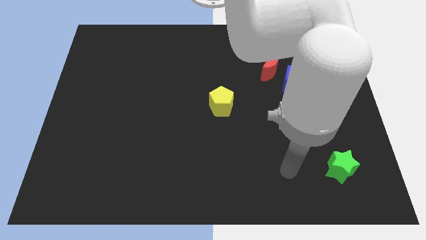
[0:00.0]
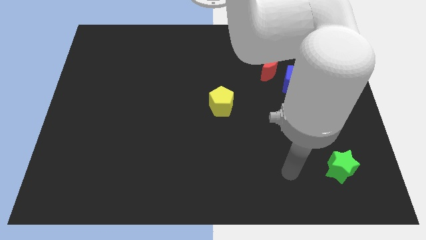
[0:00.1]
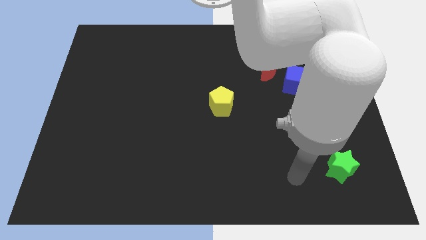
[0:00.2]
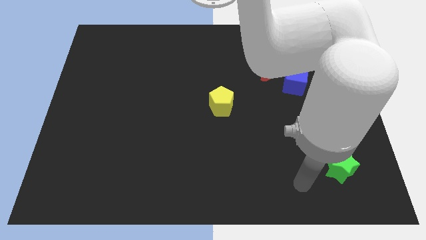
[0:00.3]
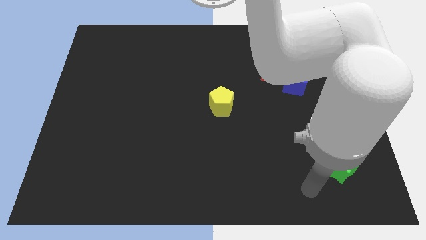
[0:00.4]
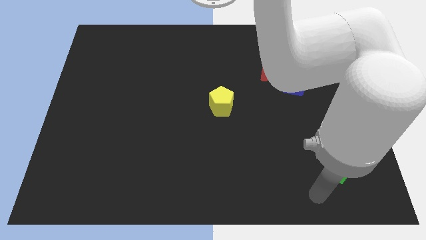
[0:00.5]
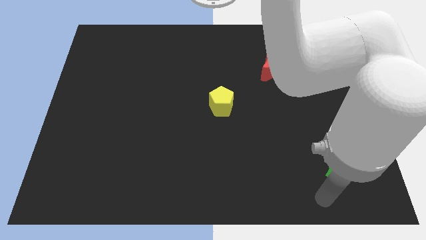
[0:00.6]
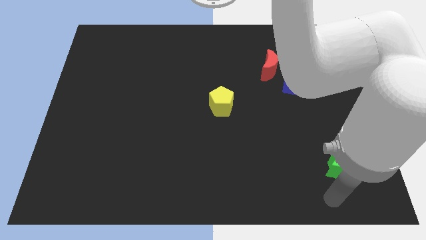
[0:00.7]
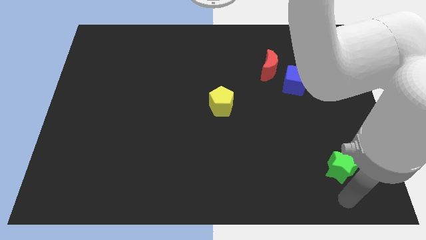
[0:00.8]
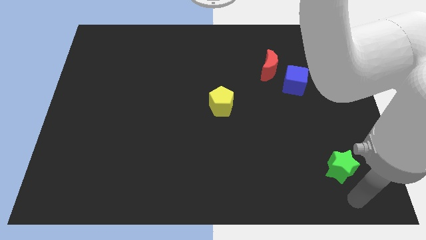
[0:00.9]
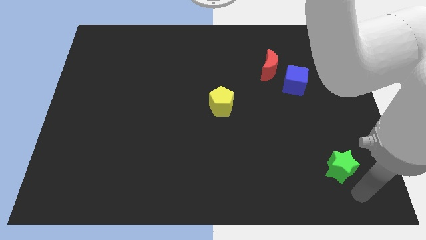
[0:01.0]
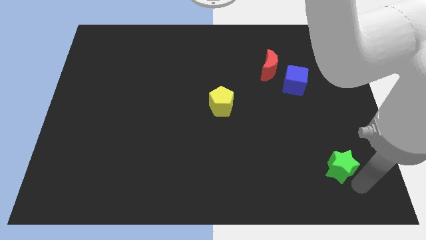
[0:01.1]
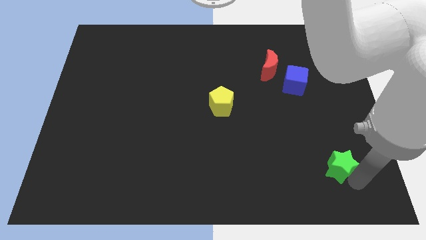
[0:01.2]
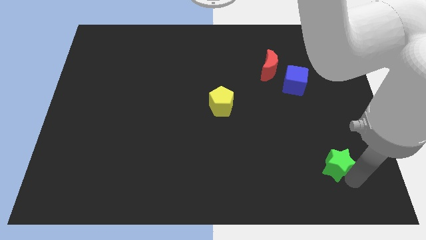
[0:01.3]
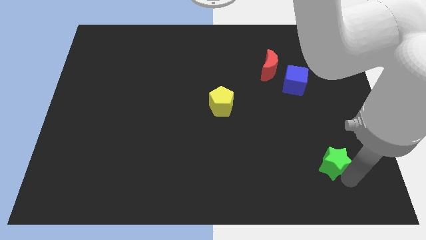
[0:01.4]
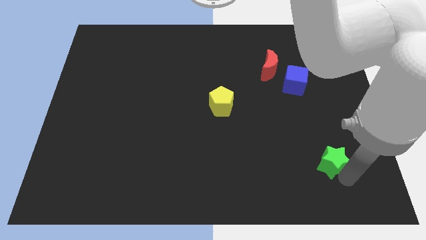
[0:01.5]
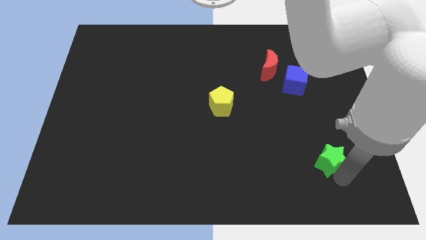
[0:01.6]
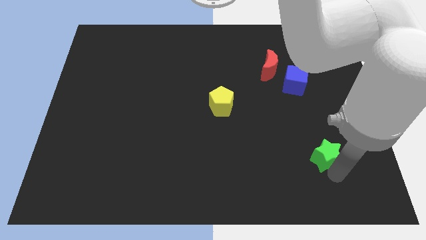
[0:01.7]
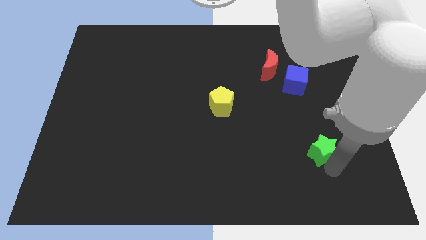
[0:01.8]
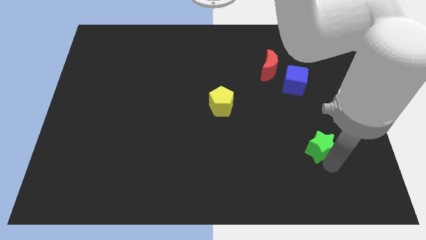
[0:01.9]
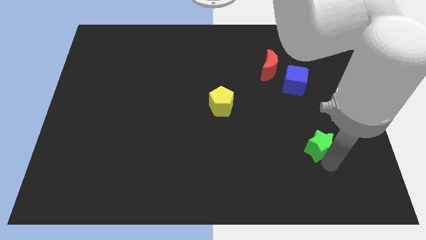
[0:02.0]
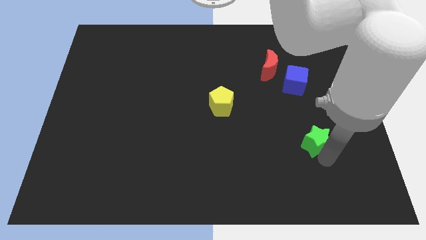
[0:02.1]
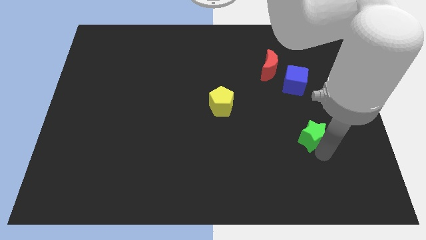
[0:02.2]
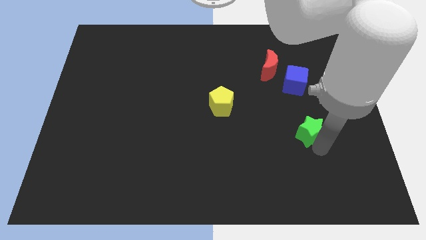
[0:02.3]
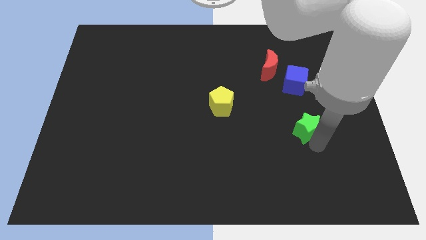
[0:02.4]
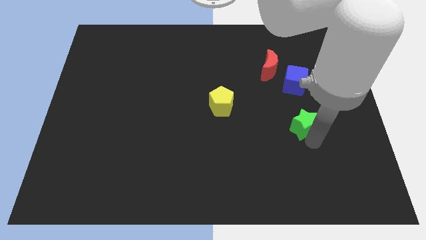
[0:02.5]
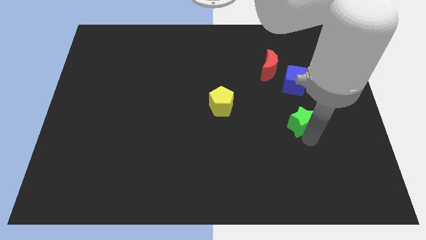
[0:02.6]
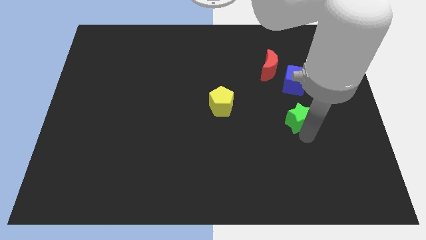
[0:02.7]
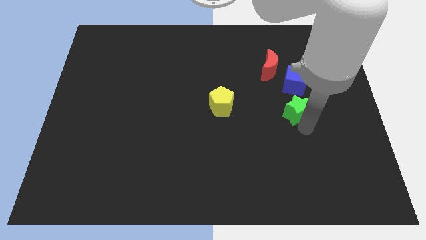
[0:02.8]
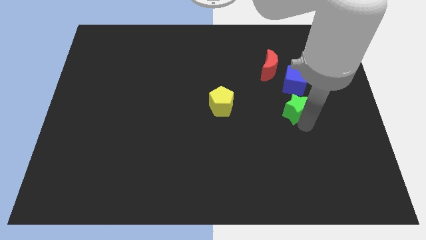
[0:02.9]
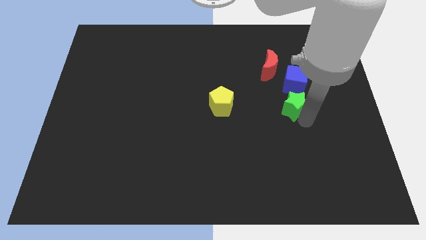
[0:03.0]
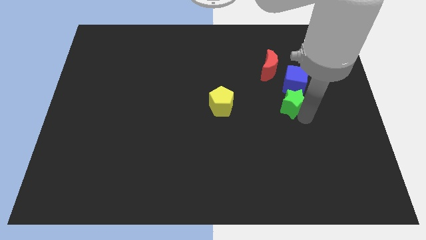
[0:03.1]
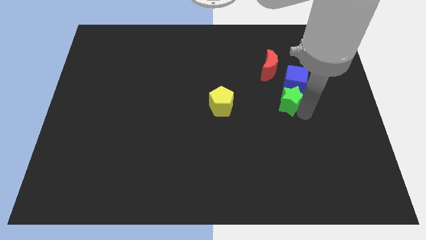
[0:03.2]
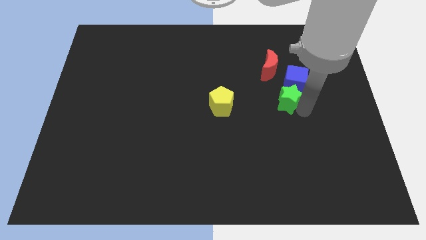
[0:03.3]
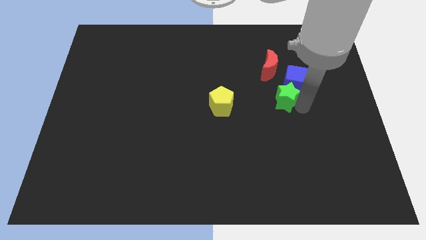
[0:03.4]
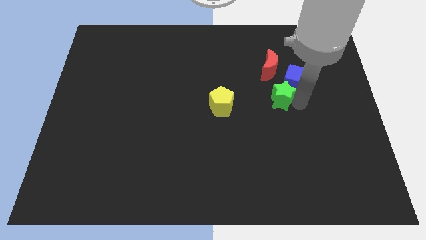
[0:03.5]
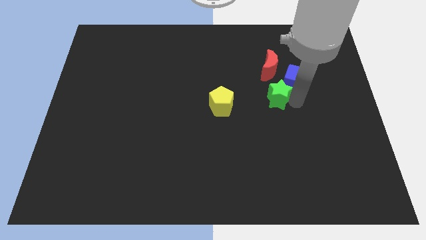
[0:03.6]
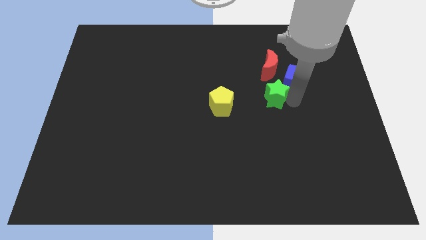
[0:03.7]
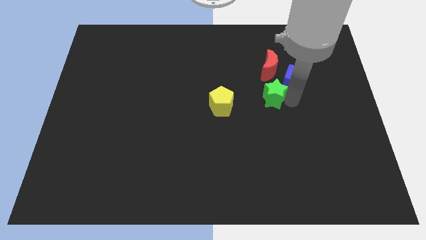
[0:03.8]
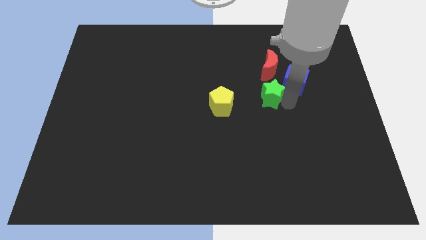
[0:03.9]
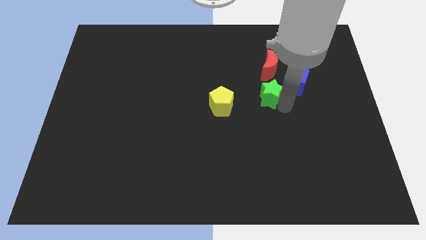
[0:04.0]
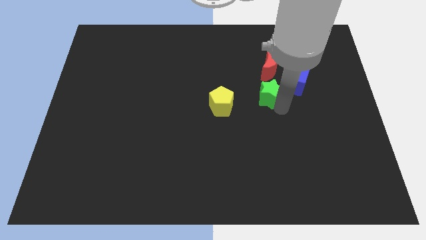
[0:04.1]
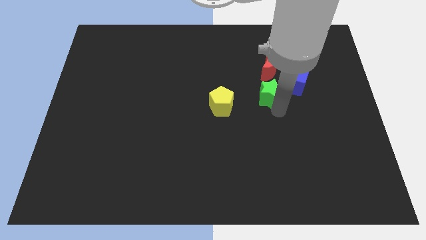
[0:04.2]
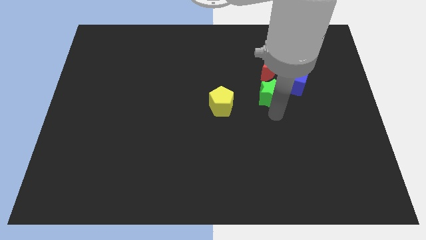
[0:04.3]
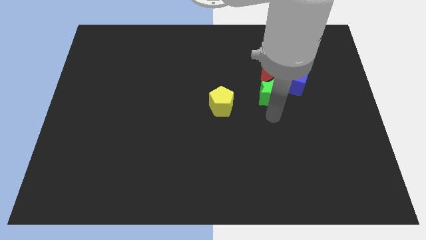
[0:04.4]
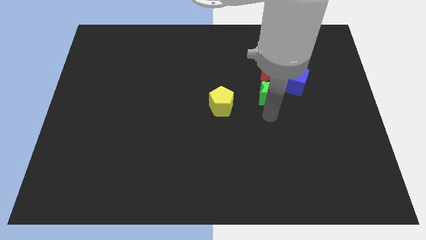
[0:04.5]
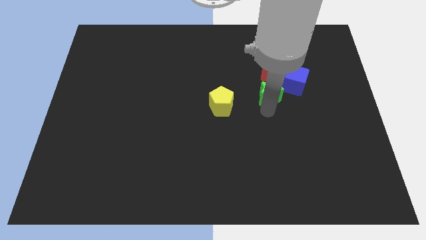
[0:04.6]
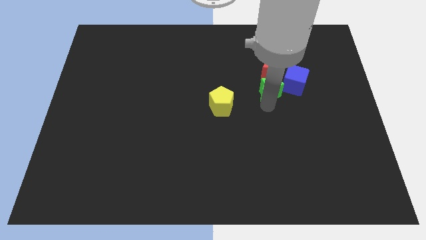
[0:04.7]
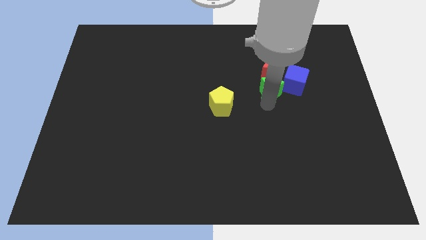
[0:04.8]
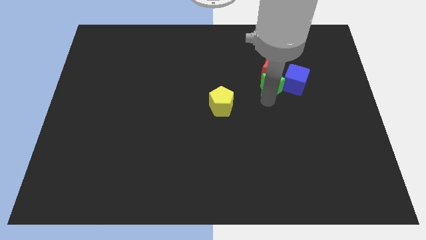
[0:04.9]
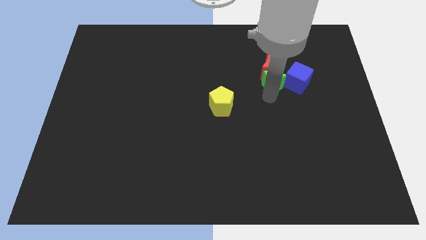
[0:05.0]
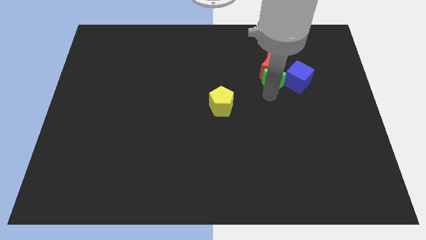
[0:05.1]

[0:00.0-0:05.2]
put the star towards the moon

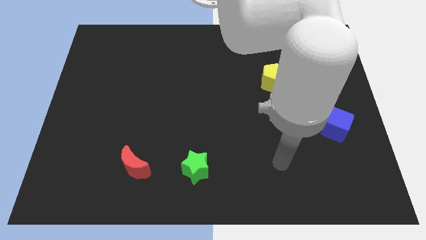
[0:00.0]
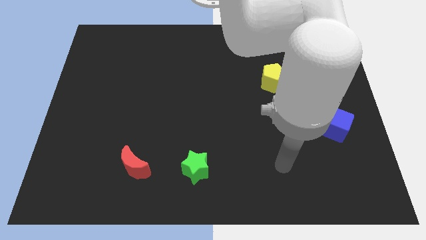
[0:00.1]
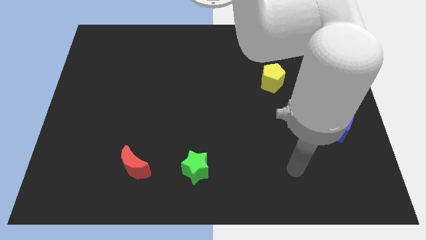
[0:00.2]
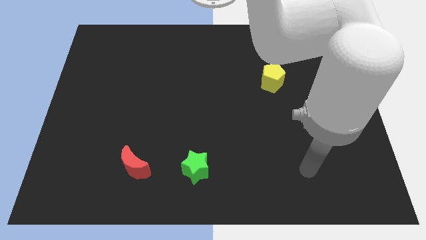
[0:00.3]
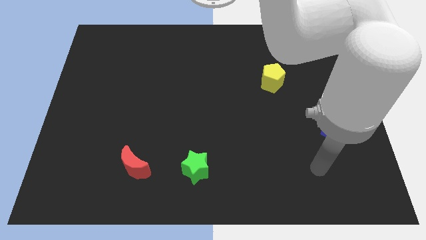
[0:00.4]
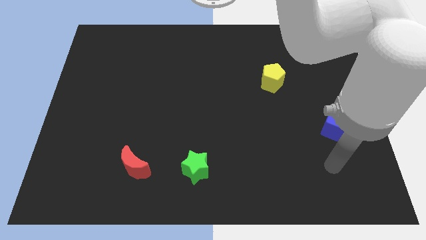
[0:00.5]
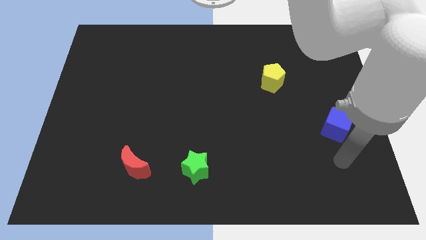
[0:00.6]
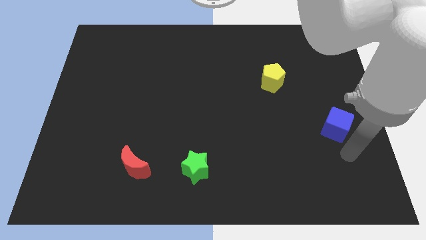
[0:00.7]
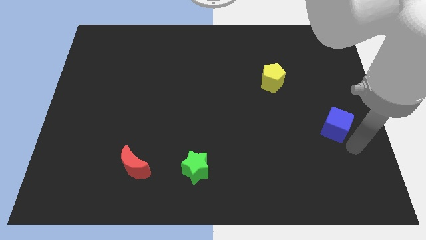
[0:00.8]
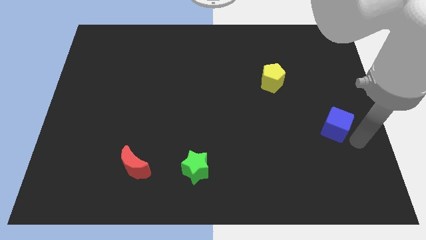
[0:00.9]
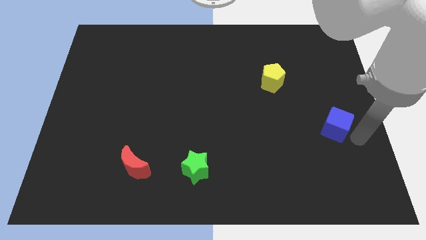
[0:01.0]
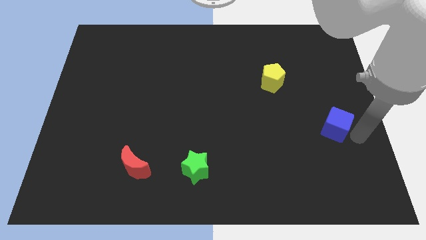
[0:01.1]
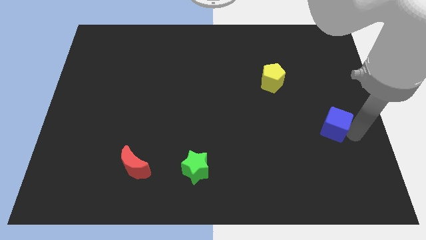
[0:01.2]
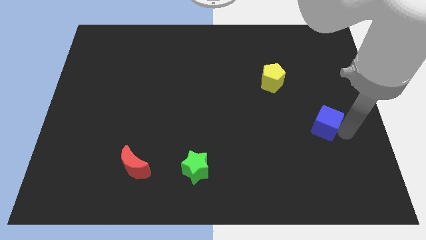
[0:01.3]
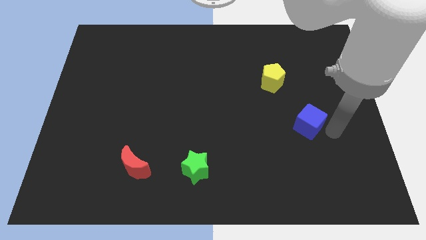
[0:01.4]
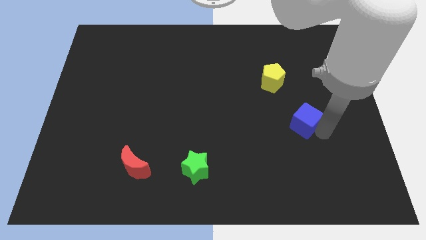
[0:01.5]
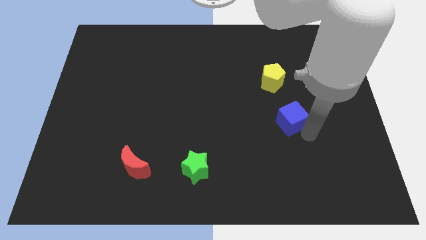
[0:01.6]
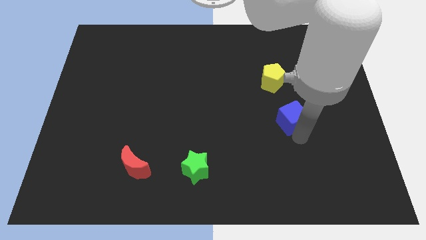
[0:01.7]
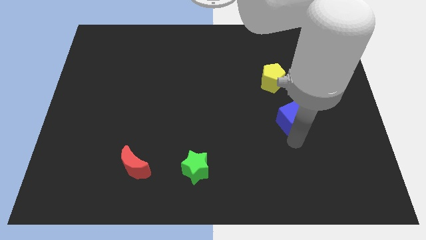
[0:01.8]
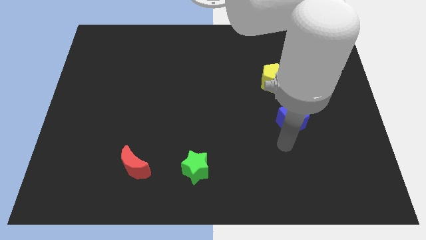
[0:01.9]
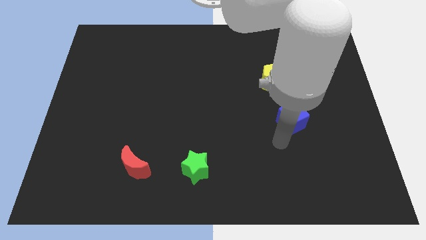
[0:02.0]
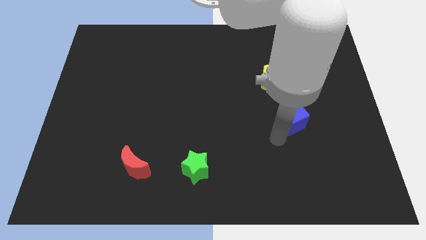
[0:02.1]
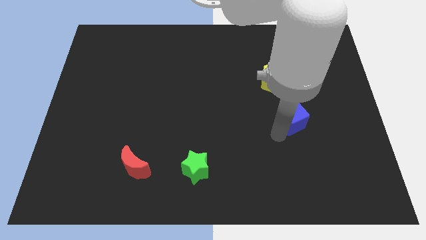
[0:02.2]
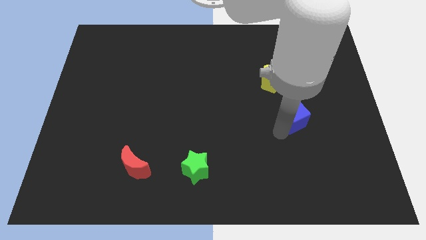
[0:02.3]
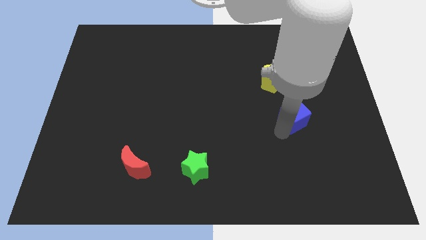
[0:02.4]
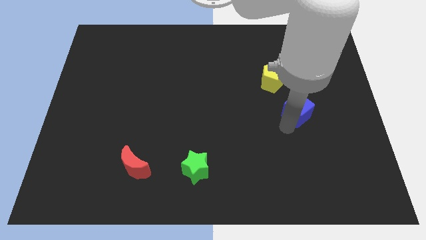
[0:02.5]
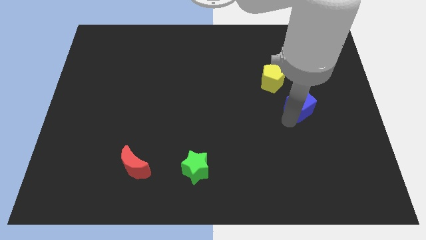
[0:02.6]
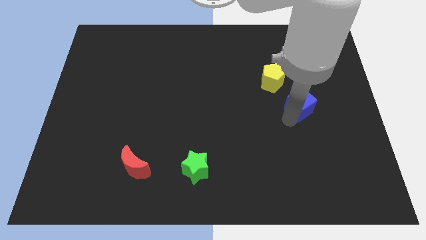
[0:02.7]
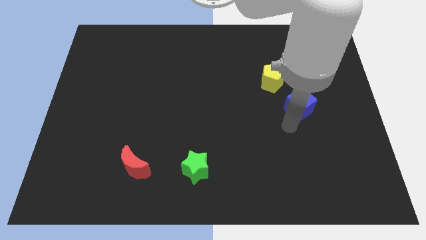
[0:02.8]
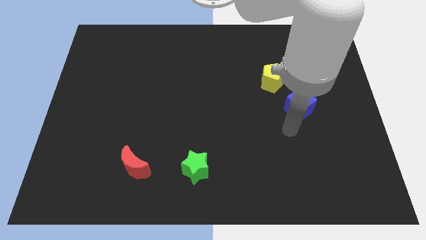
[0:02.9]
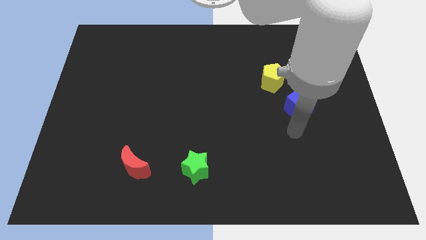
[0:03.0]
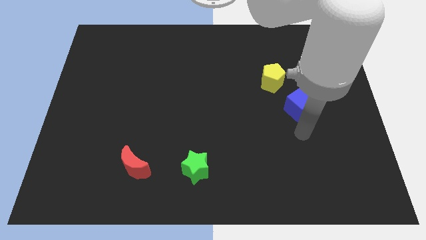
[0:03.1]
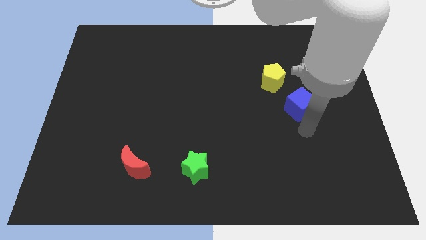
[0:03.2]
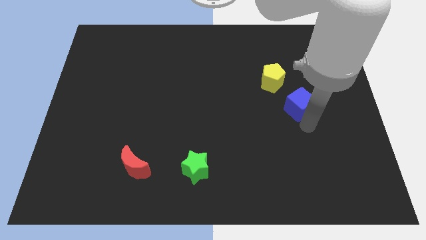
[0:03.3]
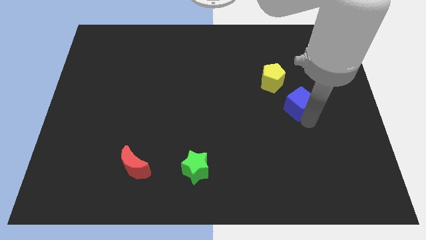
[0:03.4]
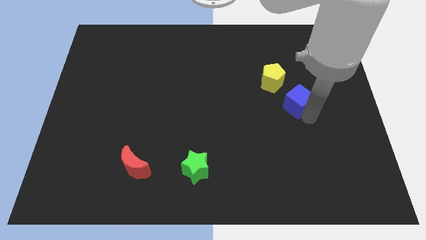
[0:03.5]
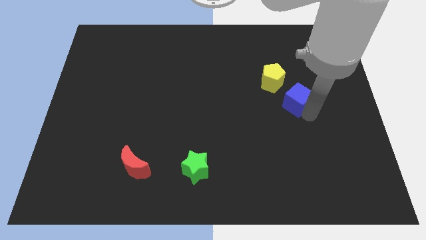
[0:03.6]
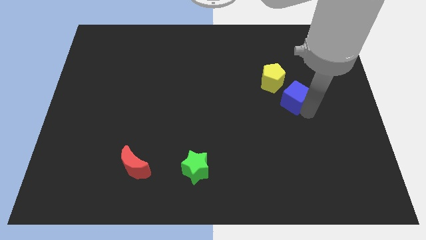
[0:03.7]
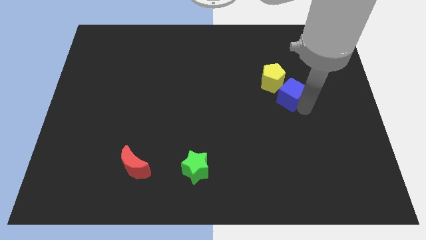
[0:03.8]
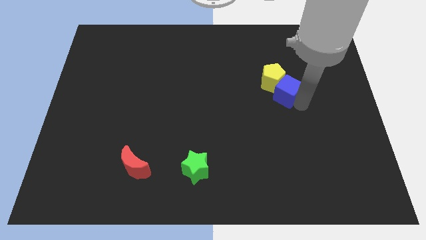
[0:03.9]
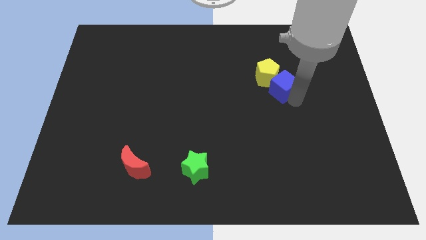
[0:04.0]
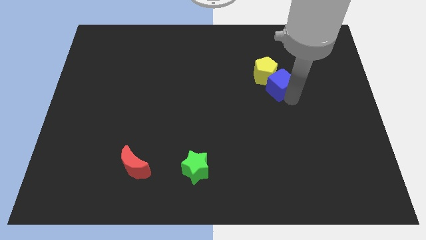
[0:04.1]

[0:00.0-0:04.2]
push the blue cube to the yellow pentagon
